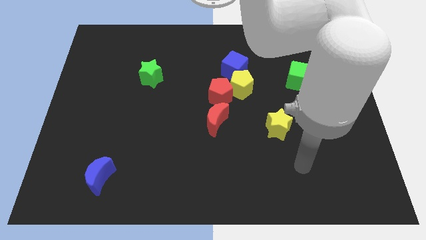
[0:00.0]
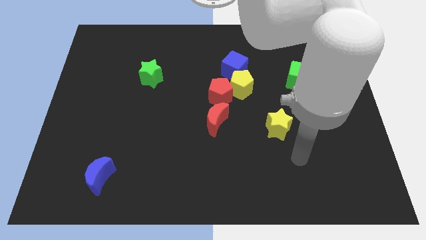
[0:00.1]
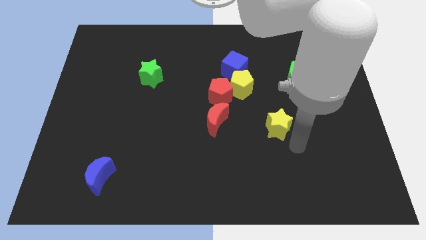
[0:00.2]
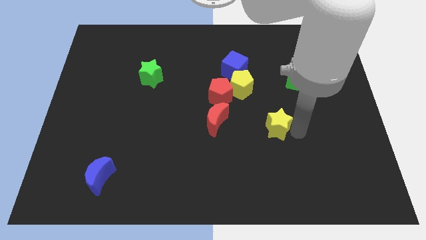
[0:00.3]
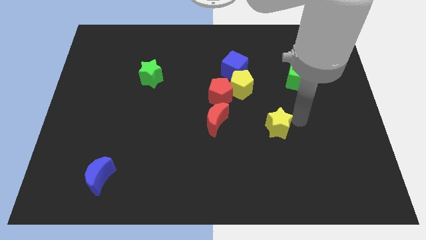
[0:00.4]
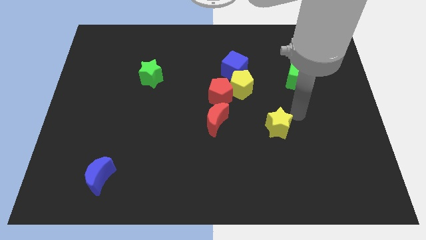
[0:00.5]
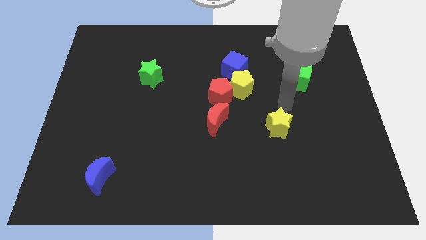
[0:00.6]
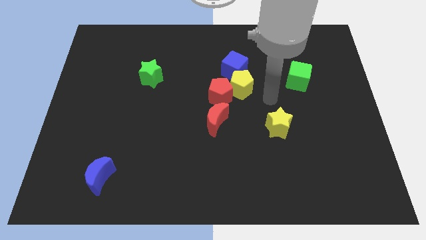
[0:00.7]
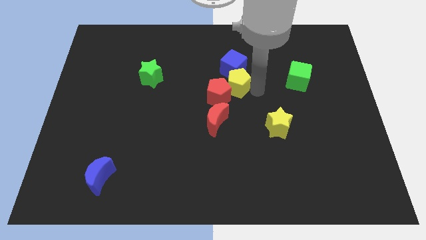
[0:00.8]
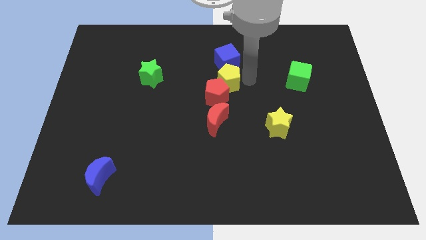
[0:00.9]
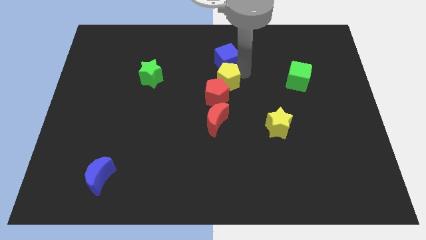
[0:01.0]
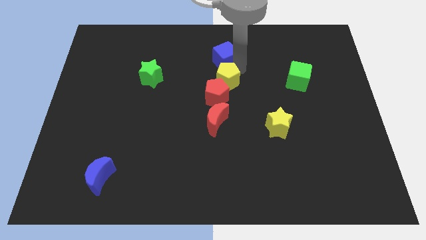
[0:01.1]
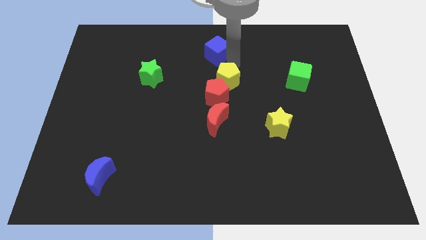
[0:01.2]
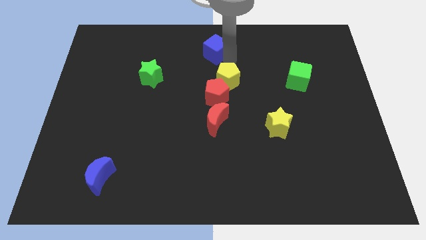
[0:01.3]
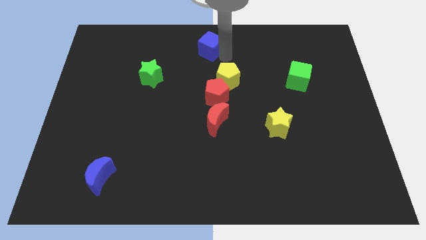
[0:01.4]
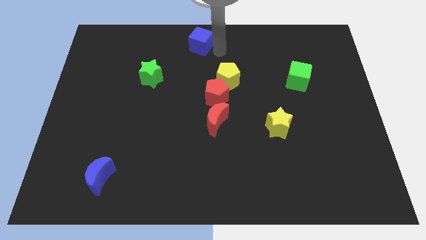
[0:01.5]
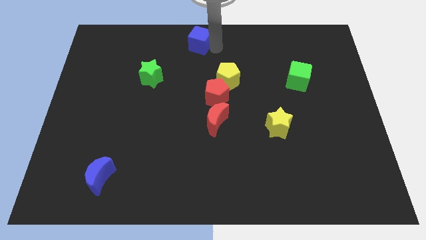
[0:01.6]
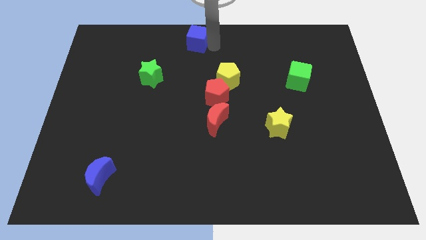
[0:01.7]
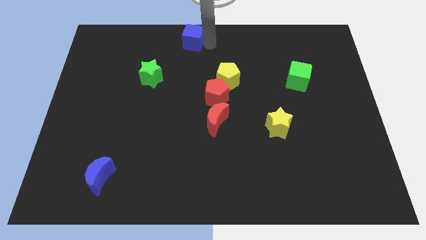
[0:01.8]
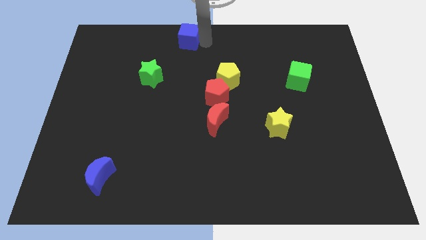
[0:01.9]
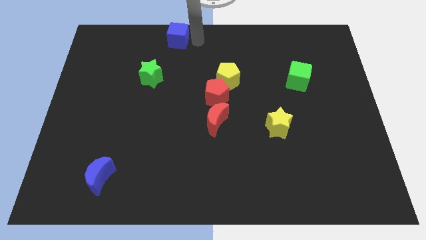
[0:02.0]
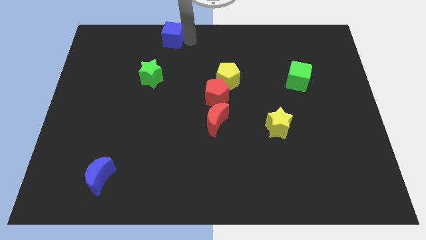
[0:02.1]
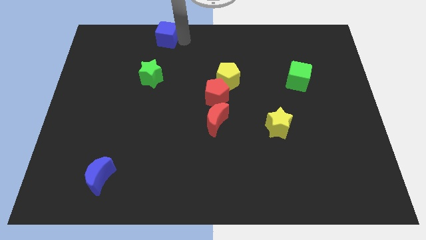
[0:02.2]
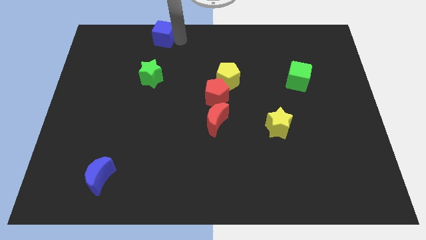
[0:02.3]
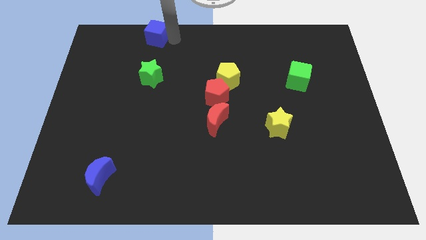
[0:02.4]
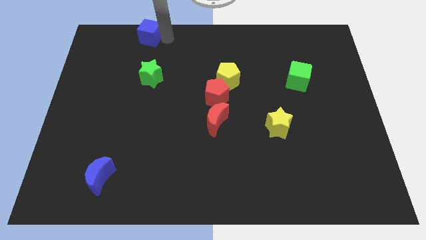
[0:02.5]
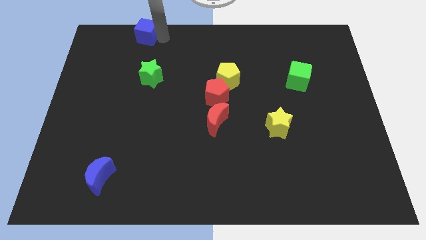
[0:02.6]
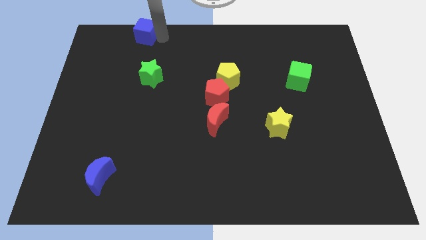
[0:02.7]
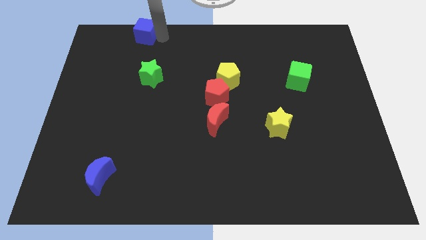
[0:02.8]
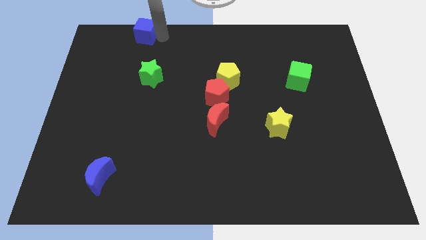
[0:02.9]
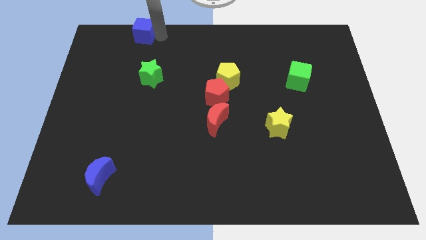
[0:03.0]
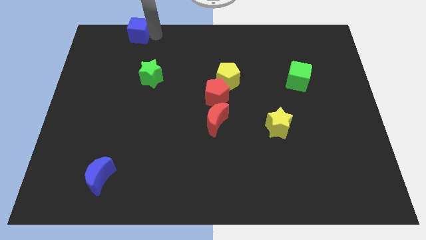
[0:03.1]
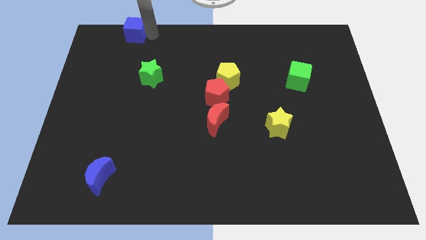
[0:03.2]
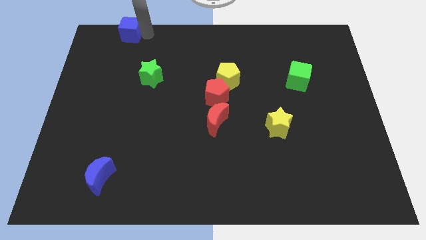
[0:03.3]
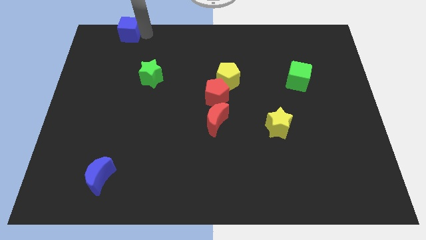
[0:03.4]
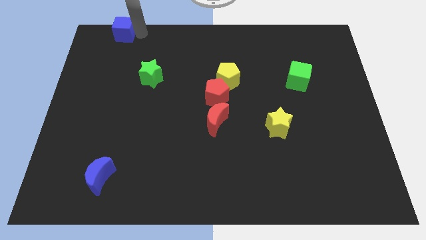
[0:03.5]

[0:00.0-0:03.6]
push blue cube towards top left

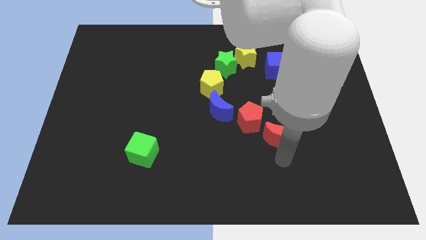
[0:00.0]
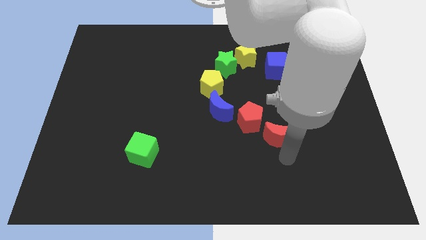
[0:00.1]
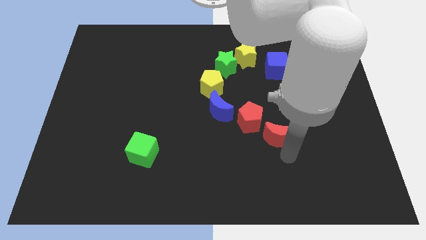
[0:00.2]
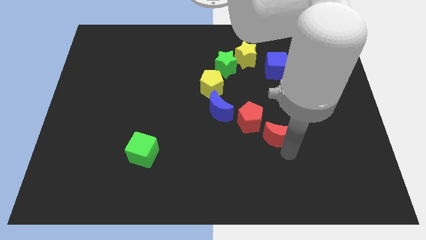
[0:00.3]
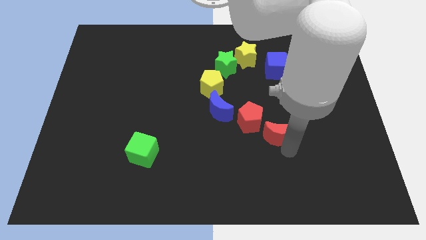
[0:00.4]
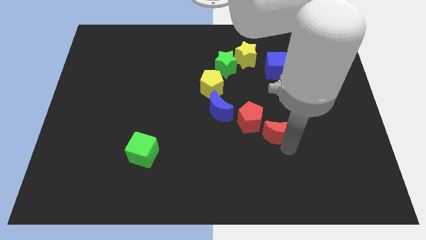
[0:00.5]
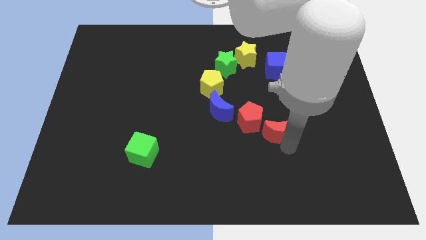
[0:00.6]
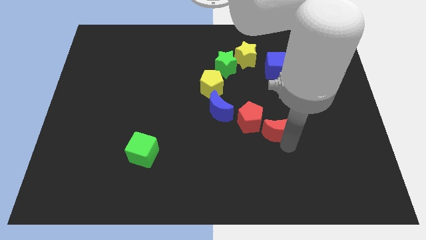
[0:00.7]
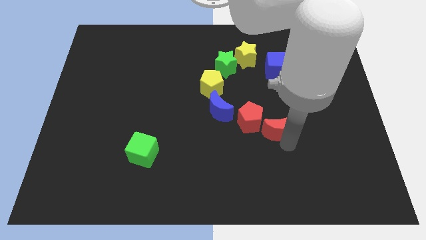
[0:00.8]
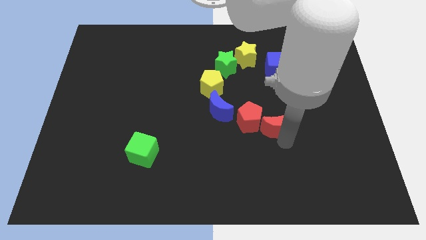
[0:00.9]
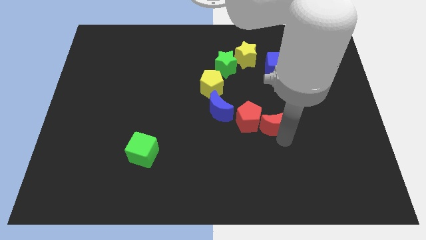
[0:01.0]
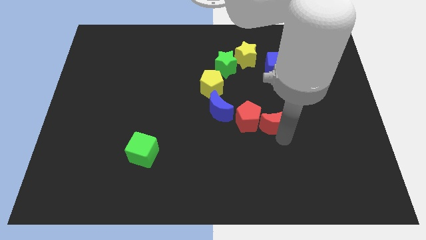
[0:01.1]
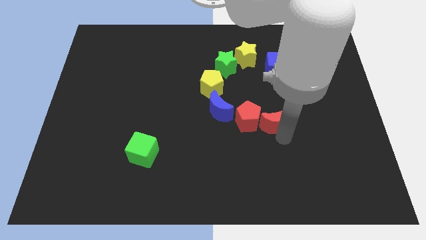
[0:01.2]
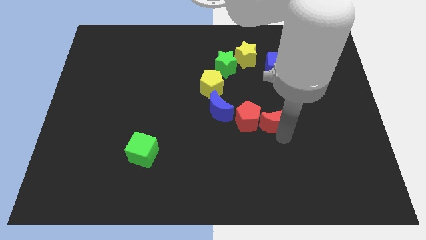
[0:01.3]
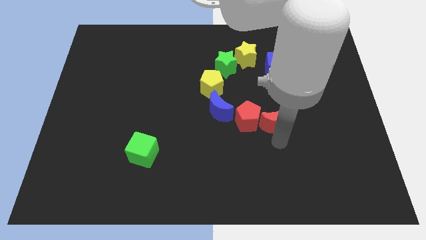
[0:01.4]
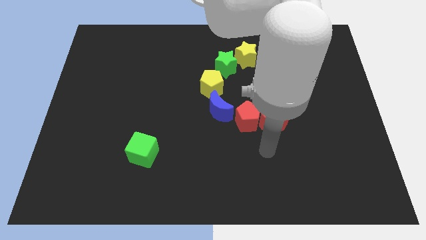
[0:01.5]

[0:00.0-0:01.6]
place the red moon to the right side of the red pentagon

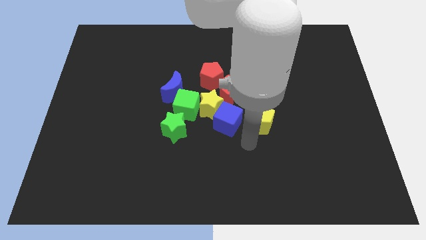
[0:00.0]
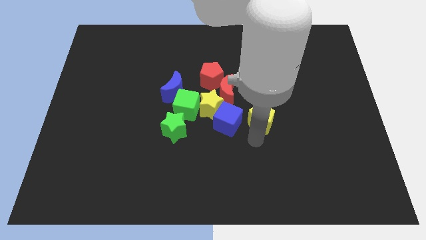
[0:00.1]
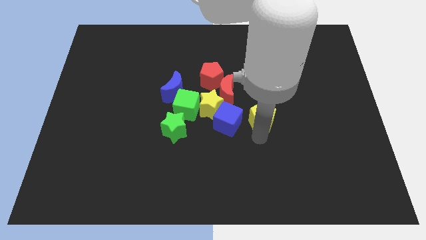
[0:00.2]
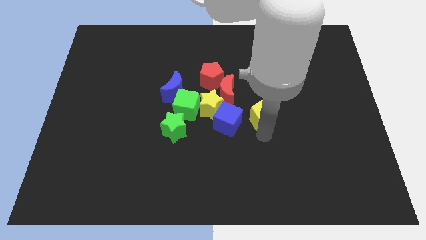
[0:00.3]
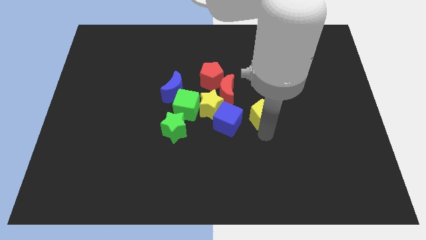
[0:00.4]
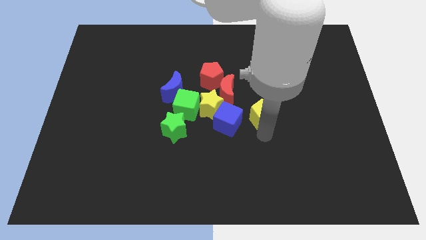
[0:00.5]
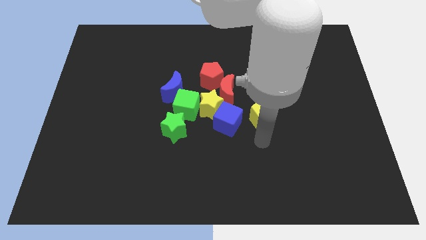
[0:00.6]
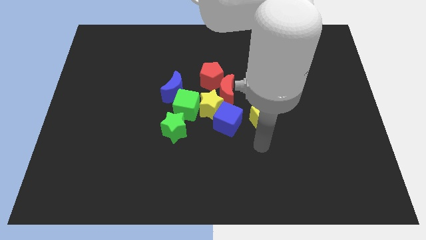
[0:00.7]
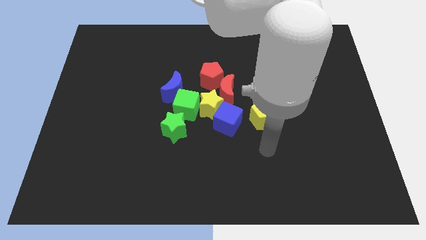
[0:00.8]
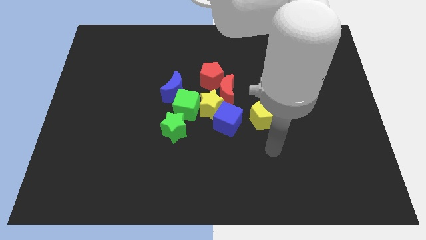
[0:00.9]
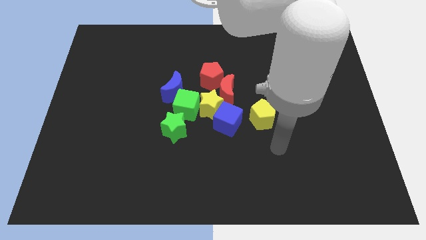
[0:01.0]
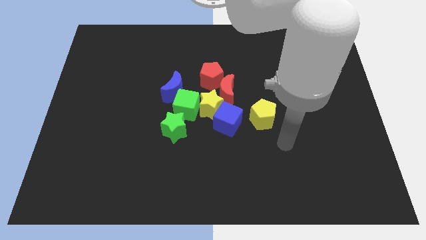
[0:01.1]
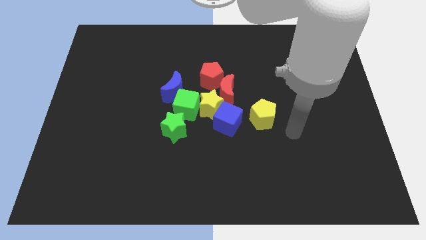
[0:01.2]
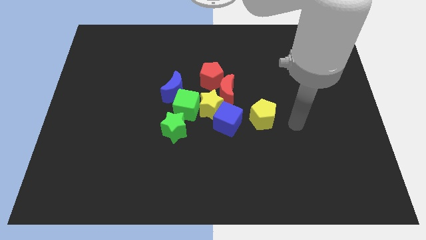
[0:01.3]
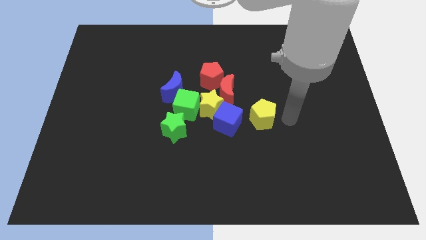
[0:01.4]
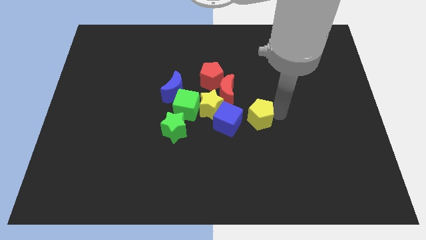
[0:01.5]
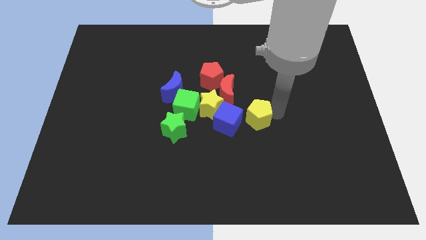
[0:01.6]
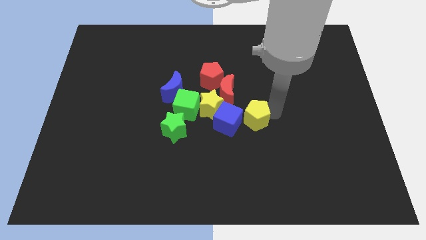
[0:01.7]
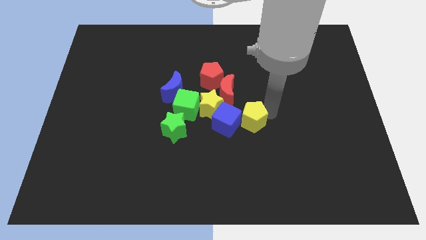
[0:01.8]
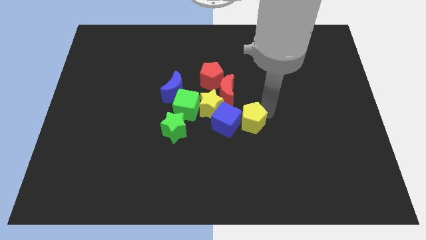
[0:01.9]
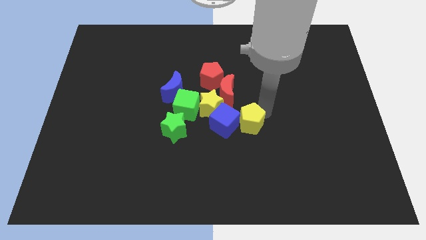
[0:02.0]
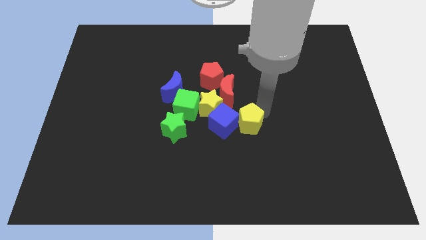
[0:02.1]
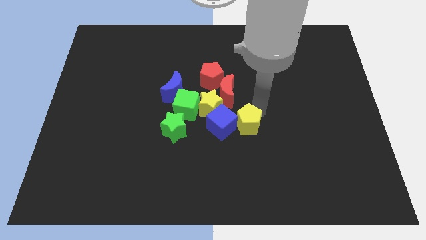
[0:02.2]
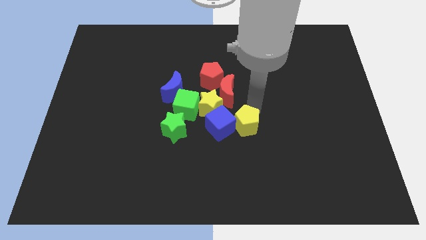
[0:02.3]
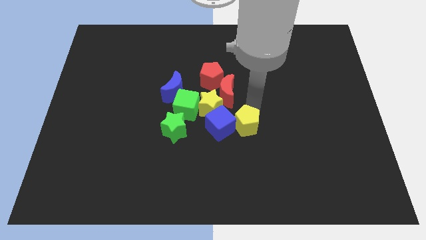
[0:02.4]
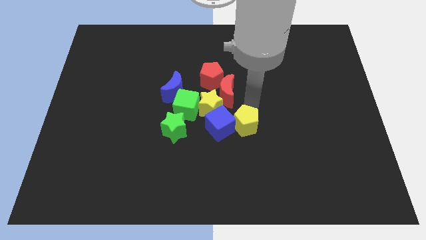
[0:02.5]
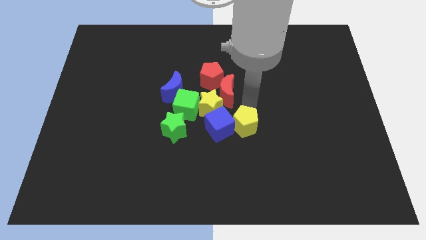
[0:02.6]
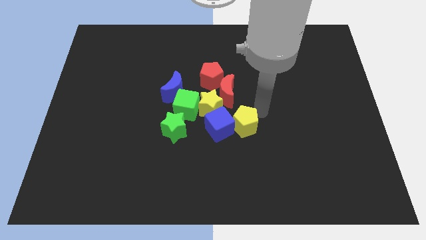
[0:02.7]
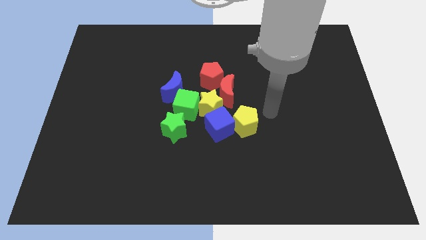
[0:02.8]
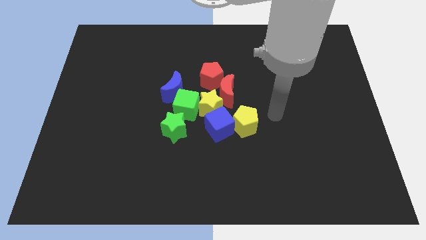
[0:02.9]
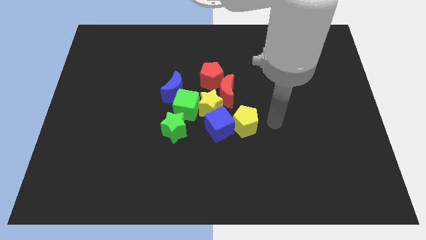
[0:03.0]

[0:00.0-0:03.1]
move the yellow pentagon into the blue cube

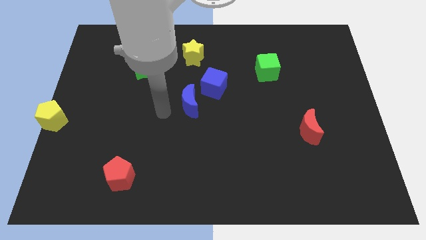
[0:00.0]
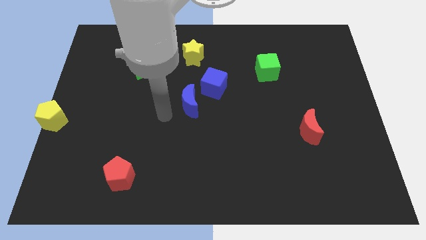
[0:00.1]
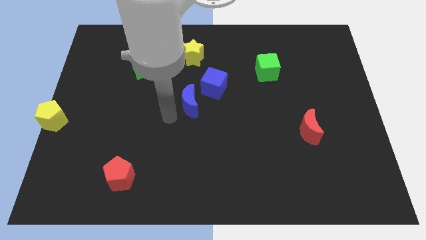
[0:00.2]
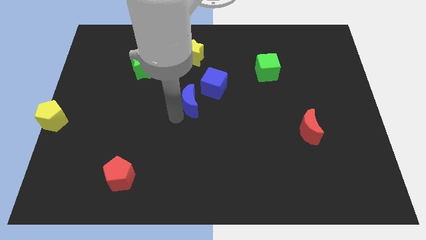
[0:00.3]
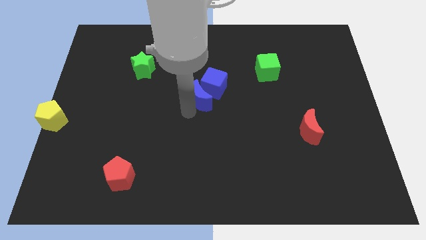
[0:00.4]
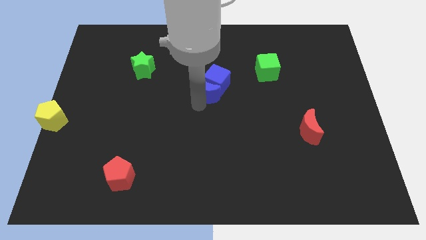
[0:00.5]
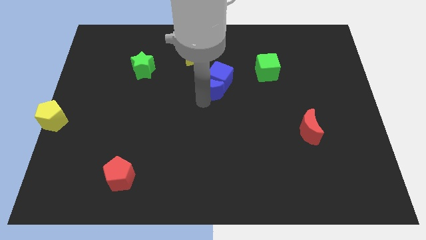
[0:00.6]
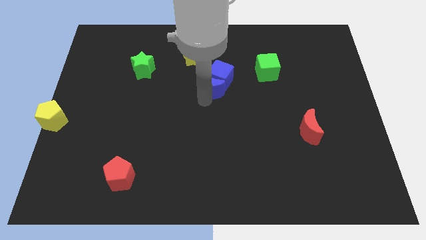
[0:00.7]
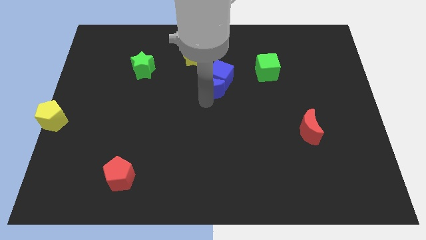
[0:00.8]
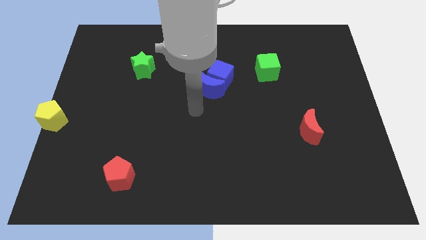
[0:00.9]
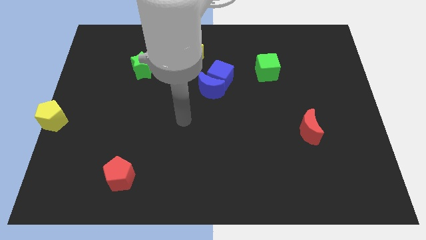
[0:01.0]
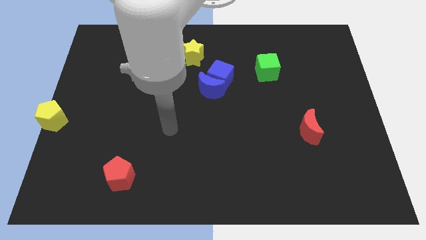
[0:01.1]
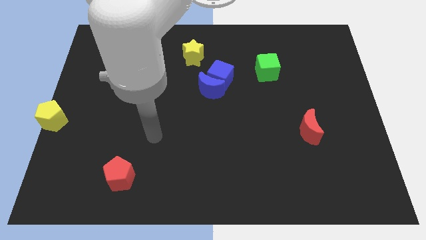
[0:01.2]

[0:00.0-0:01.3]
push the blue moon into the blue cube
